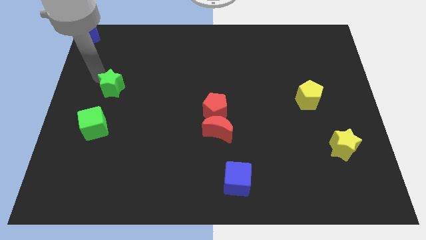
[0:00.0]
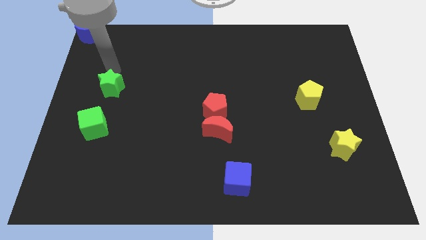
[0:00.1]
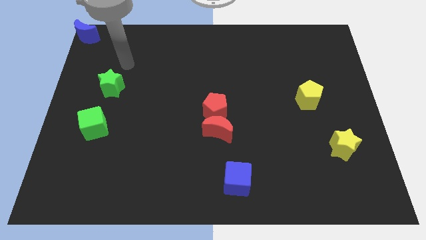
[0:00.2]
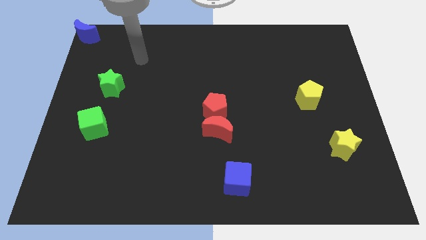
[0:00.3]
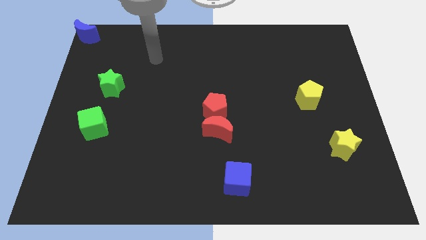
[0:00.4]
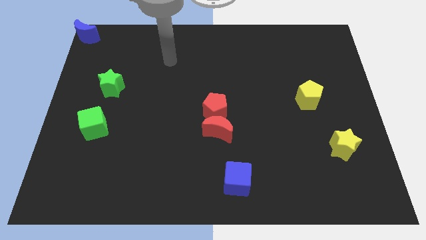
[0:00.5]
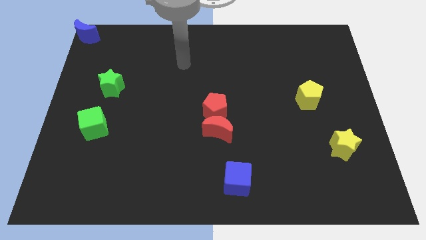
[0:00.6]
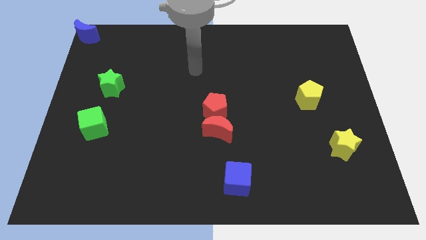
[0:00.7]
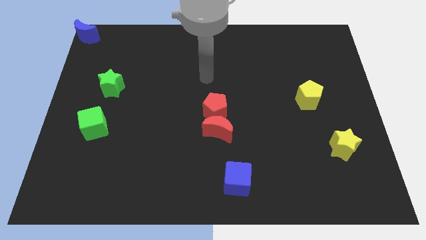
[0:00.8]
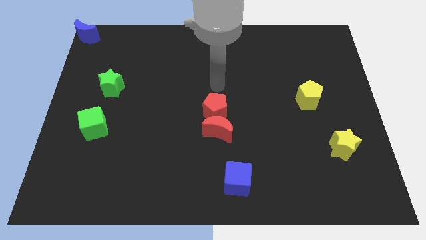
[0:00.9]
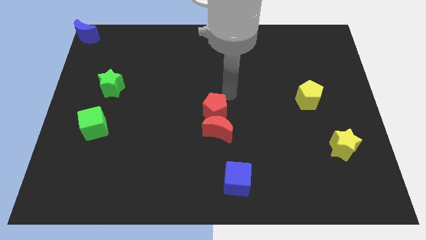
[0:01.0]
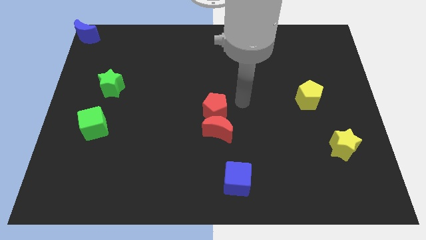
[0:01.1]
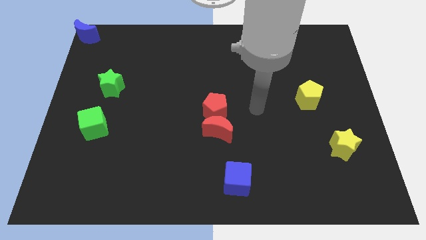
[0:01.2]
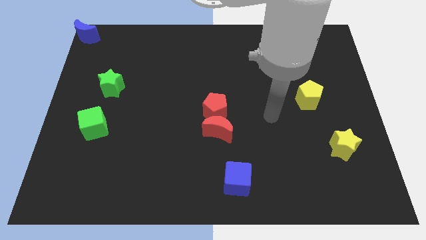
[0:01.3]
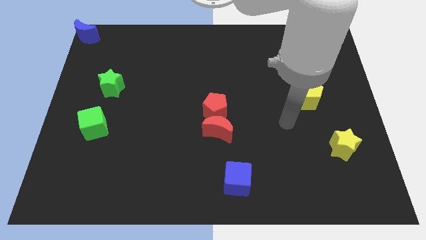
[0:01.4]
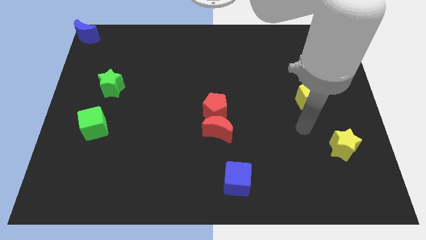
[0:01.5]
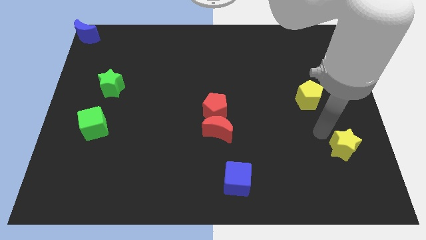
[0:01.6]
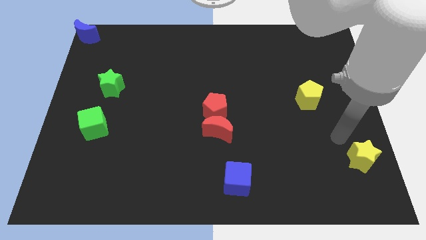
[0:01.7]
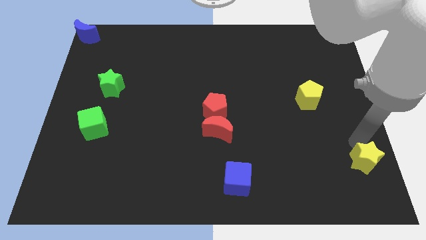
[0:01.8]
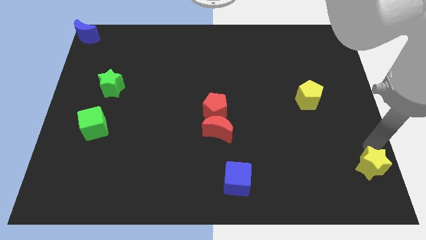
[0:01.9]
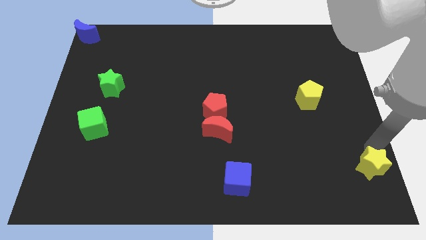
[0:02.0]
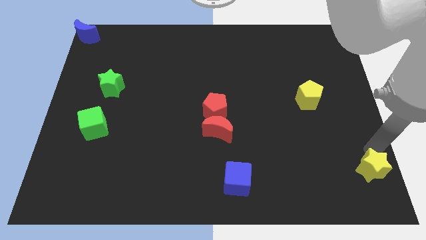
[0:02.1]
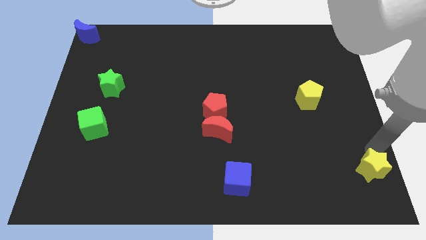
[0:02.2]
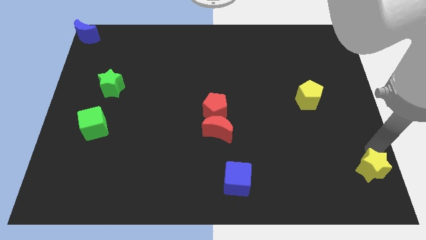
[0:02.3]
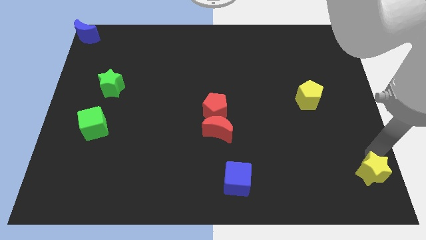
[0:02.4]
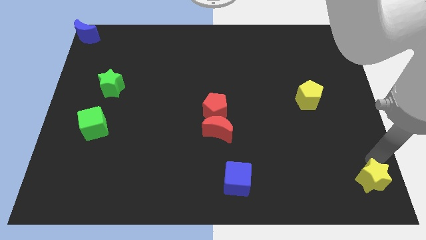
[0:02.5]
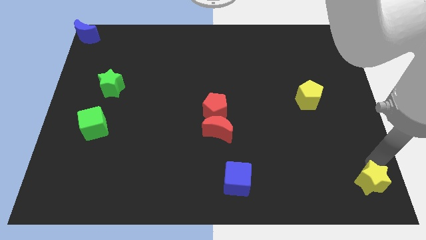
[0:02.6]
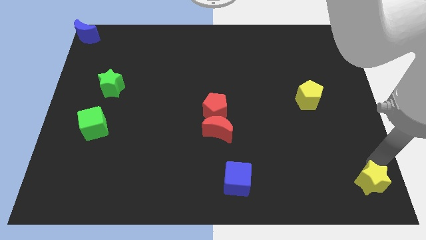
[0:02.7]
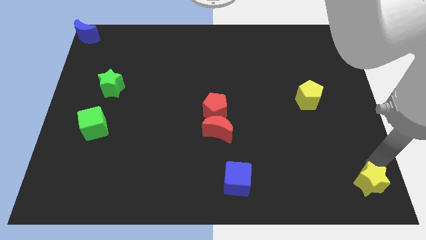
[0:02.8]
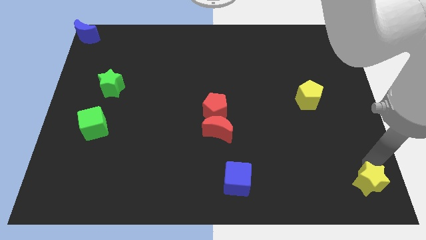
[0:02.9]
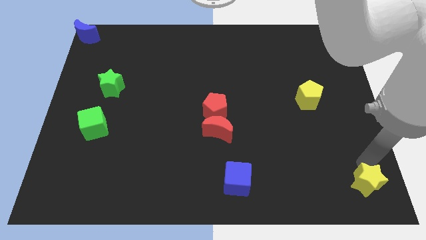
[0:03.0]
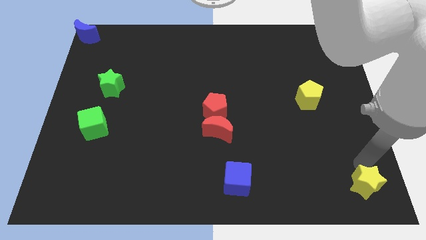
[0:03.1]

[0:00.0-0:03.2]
place the yellow star right to the blue cube

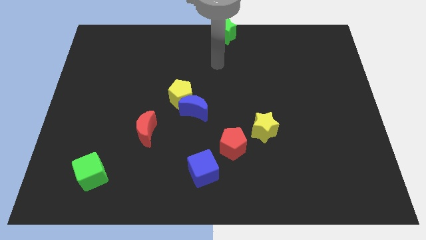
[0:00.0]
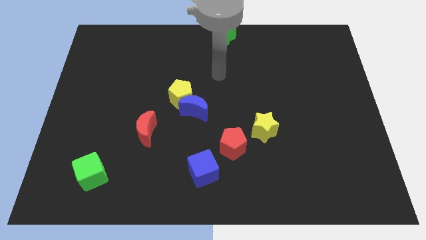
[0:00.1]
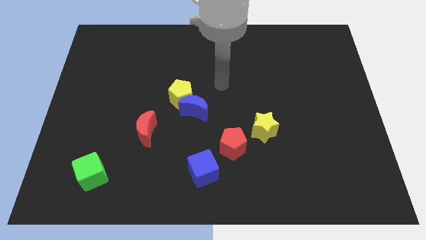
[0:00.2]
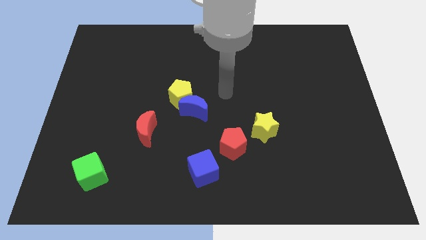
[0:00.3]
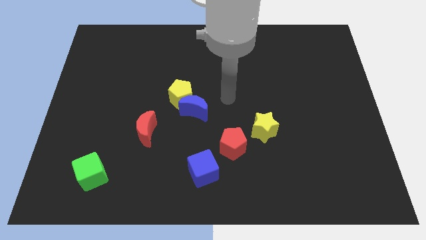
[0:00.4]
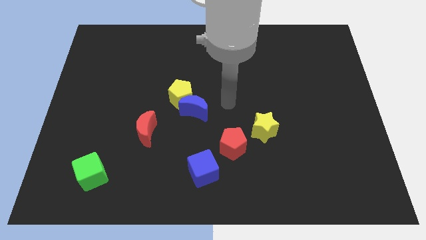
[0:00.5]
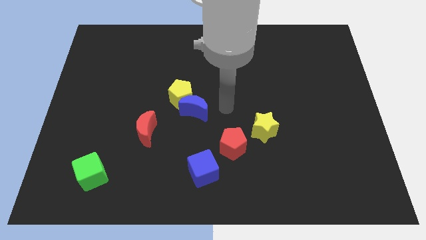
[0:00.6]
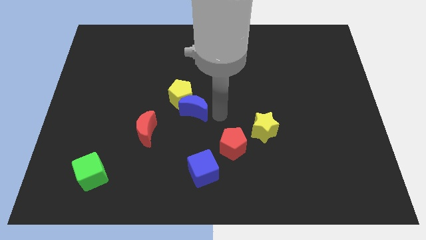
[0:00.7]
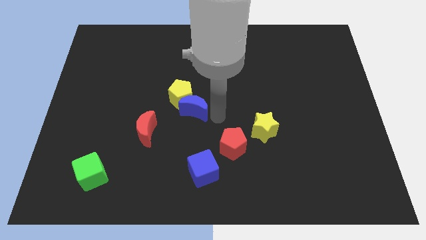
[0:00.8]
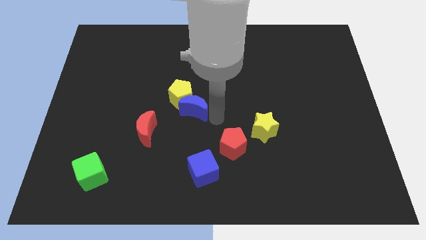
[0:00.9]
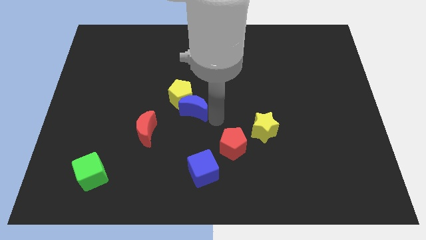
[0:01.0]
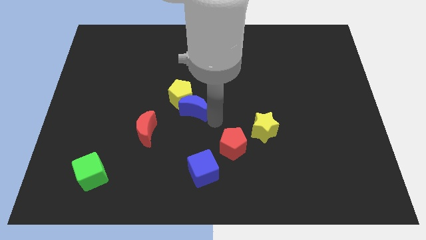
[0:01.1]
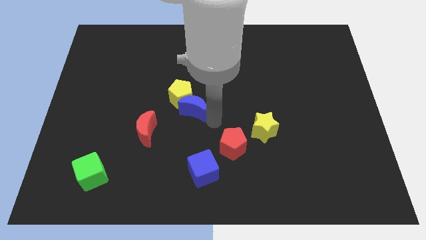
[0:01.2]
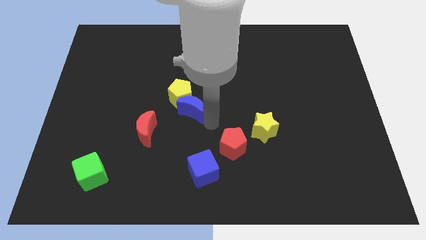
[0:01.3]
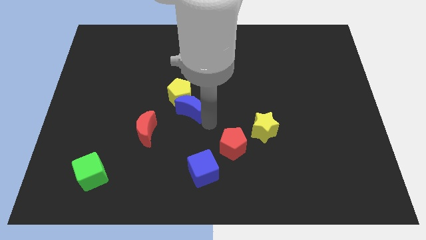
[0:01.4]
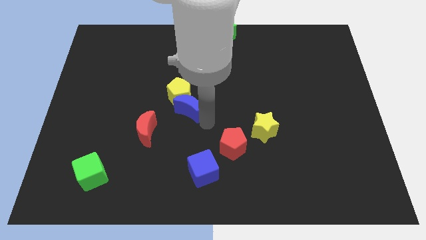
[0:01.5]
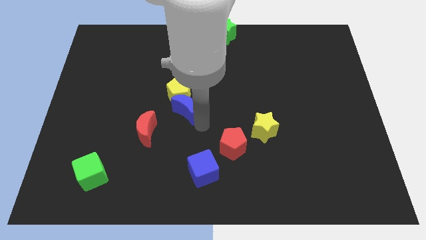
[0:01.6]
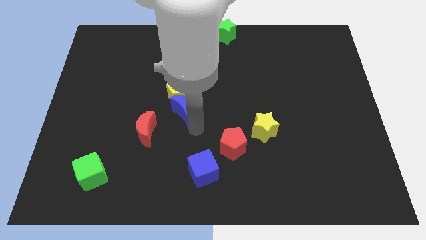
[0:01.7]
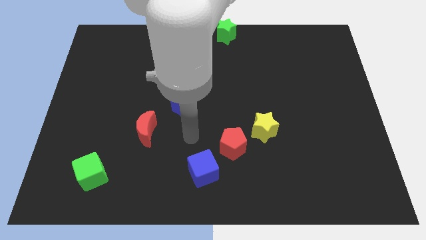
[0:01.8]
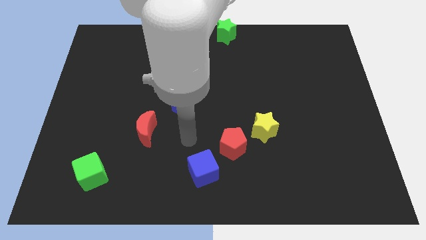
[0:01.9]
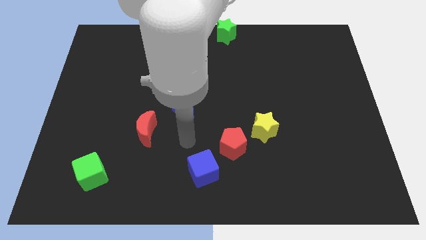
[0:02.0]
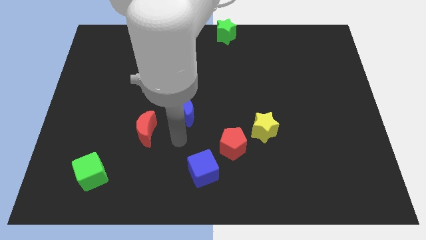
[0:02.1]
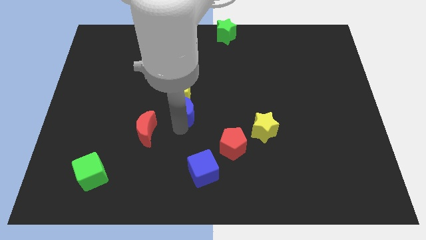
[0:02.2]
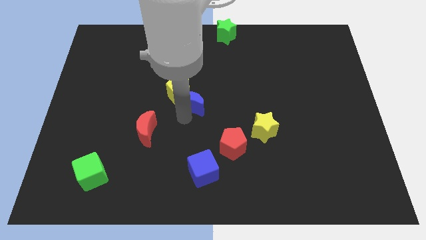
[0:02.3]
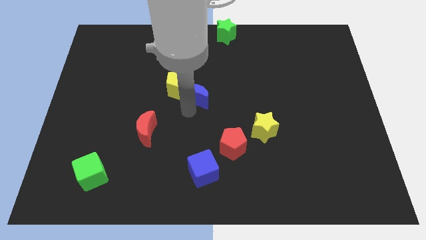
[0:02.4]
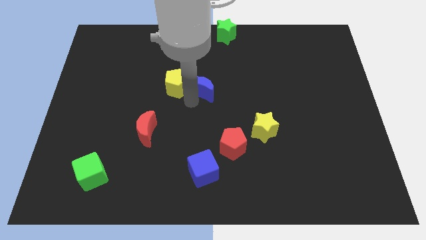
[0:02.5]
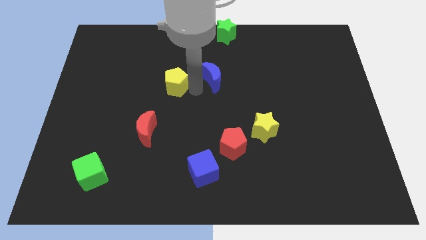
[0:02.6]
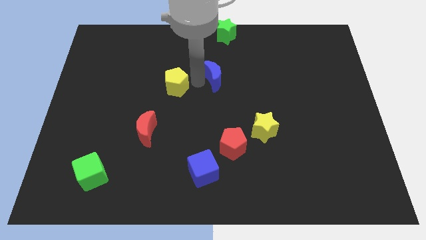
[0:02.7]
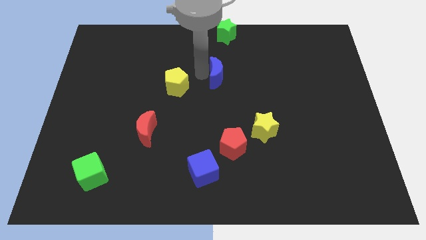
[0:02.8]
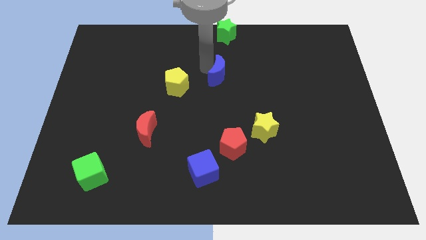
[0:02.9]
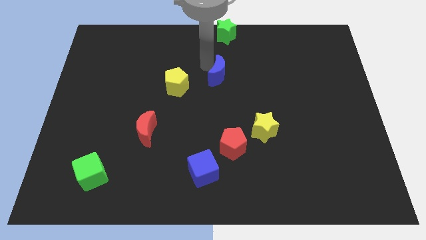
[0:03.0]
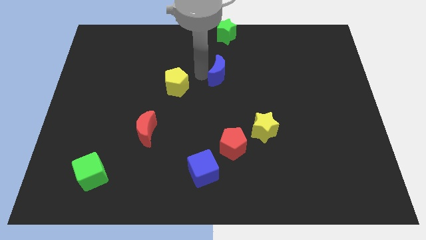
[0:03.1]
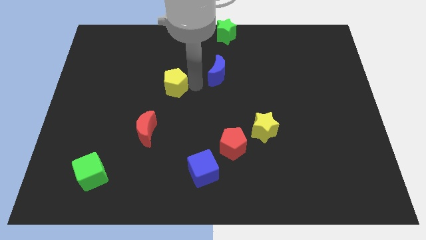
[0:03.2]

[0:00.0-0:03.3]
separate blue moon and the yellow pentagon

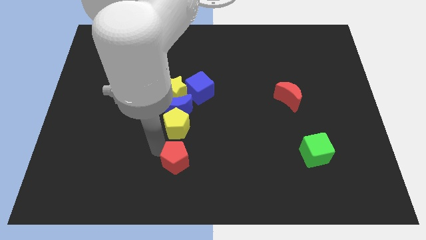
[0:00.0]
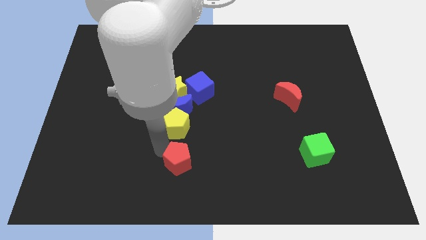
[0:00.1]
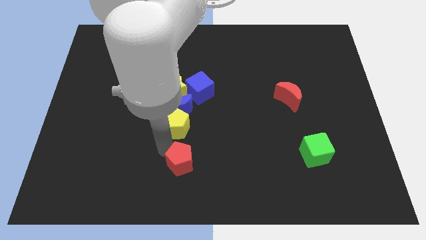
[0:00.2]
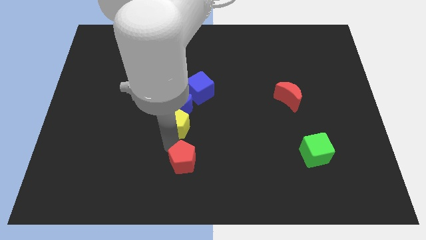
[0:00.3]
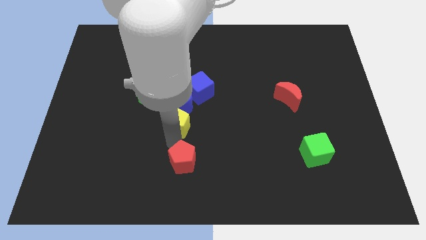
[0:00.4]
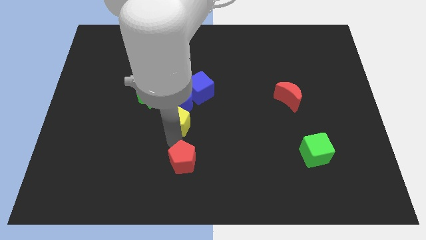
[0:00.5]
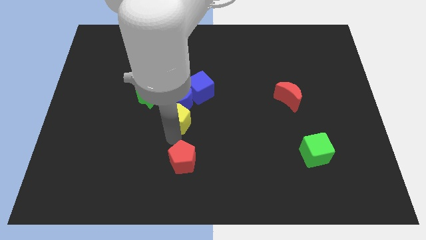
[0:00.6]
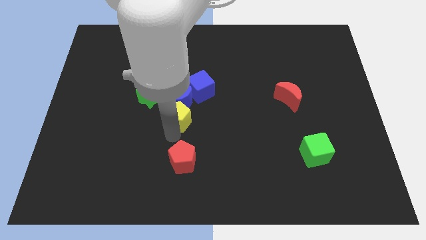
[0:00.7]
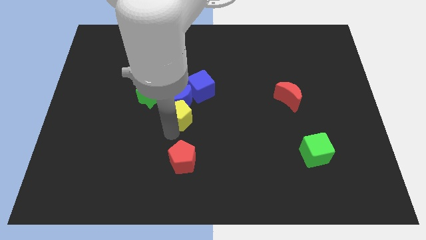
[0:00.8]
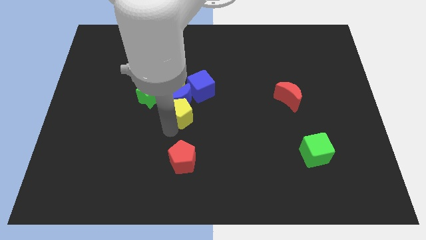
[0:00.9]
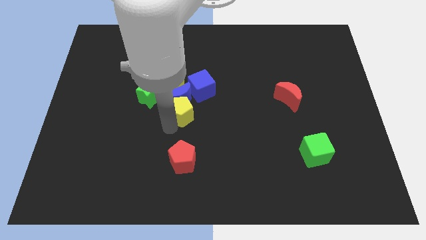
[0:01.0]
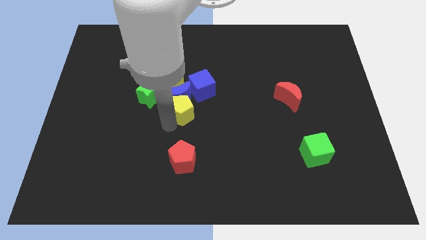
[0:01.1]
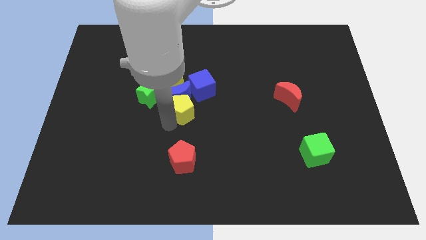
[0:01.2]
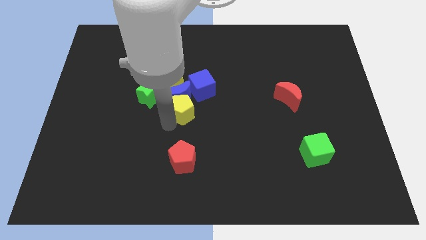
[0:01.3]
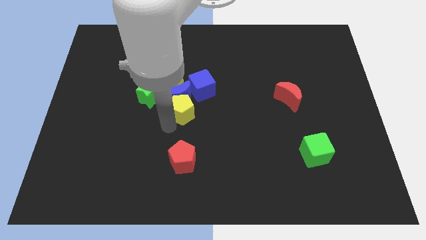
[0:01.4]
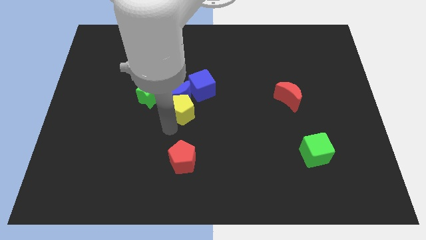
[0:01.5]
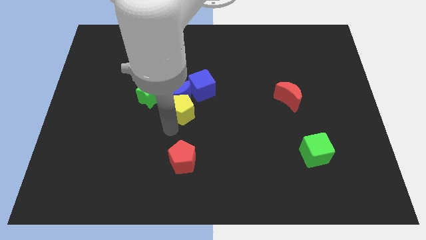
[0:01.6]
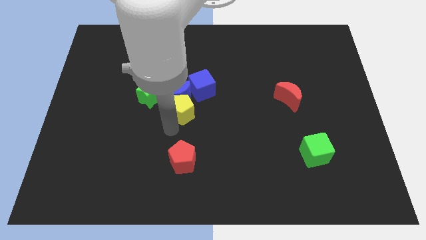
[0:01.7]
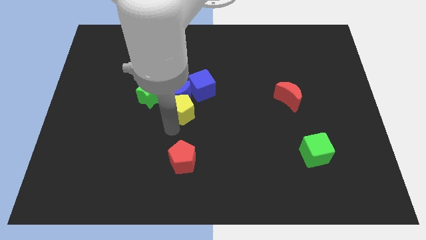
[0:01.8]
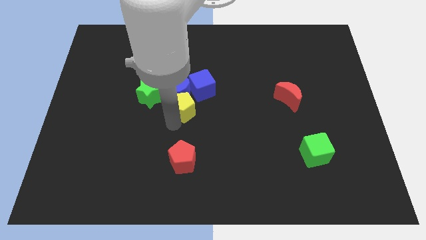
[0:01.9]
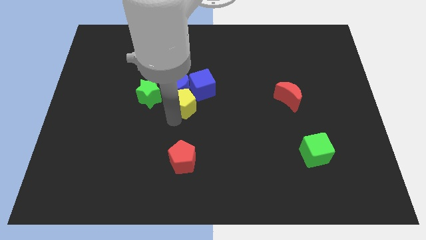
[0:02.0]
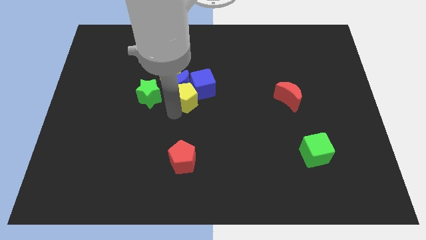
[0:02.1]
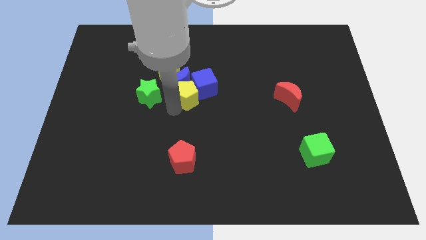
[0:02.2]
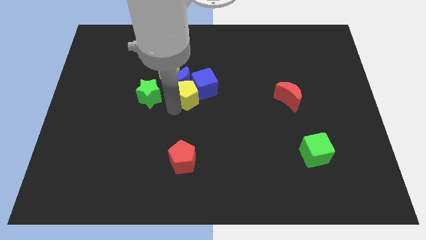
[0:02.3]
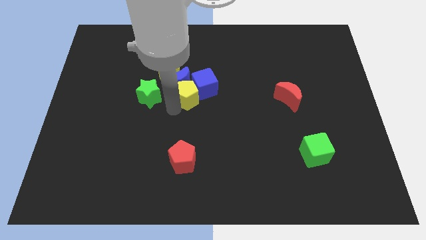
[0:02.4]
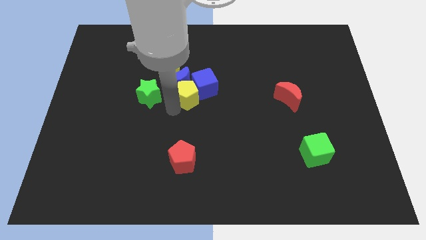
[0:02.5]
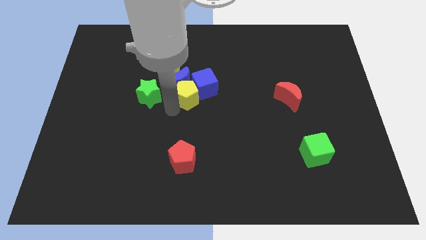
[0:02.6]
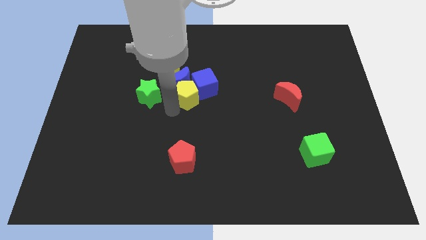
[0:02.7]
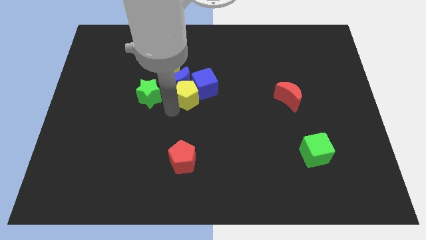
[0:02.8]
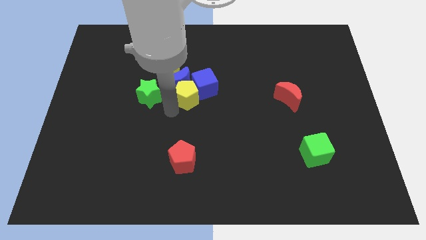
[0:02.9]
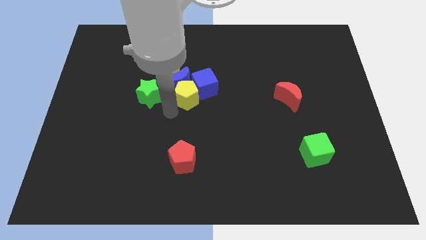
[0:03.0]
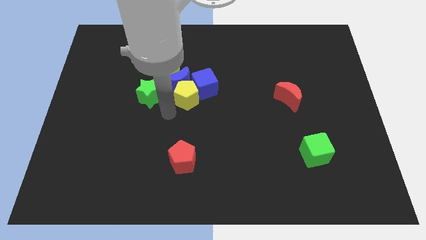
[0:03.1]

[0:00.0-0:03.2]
push yellow pentagon towards upward
